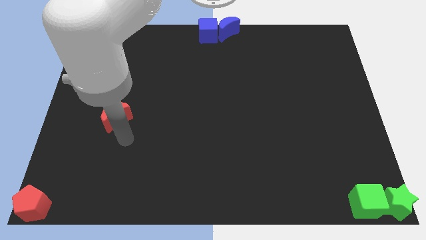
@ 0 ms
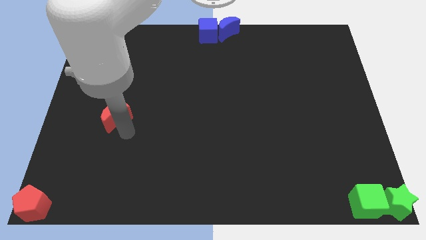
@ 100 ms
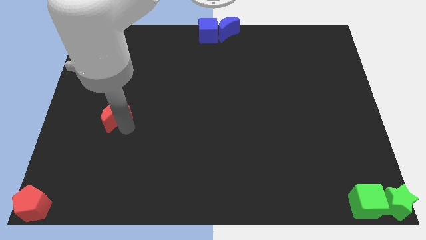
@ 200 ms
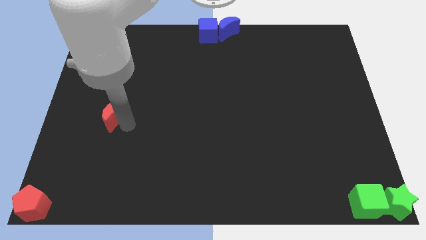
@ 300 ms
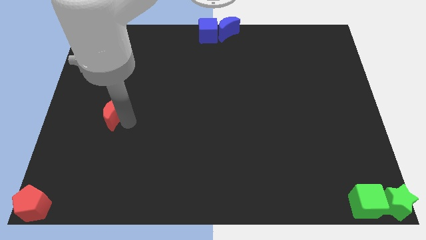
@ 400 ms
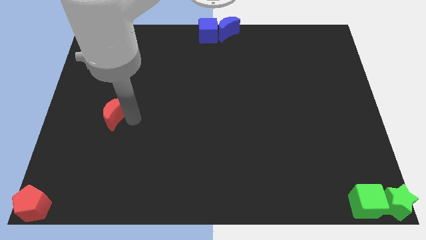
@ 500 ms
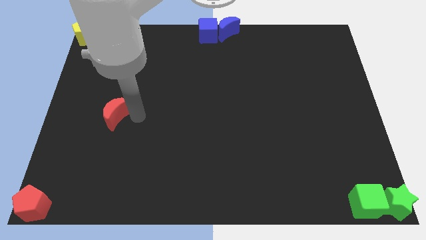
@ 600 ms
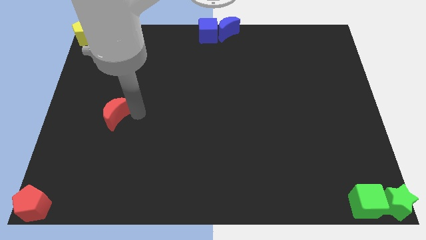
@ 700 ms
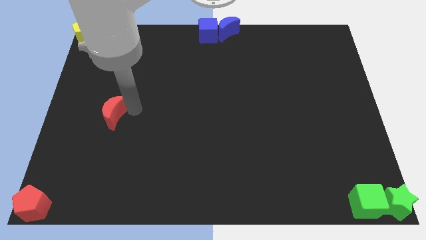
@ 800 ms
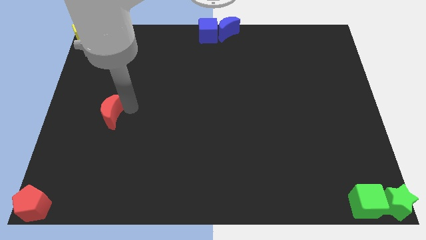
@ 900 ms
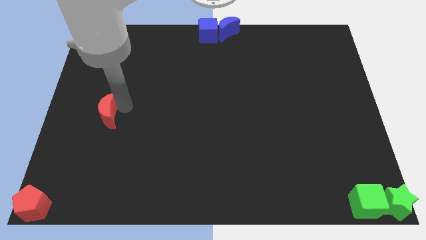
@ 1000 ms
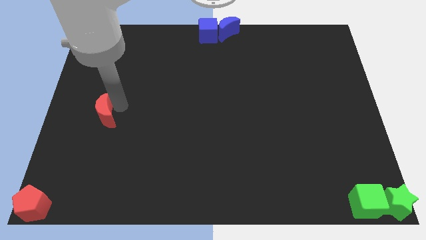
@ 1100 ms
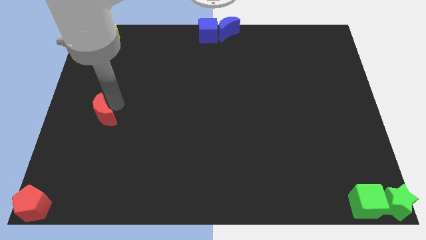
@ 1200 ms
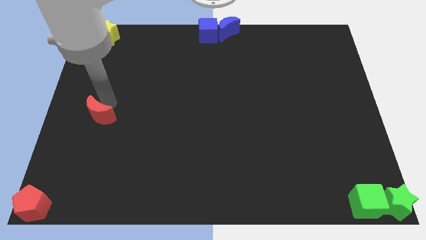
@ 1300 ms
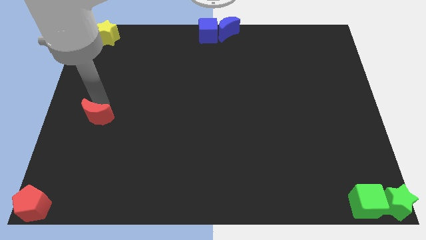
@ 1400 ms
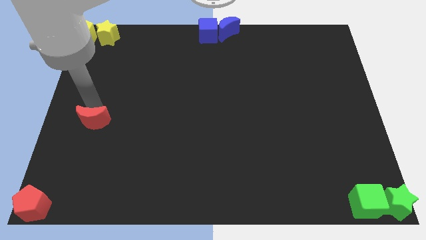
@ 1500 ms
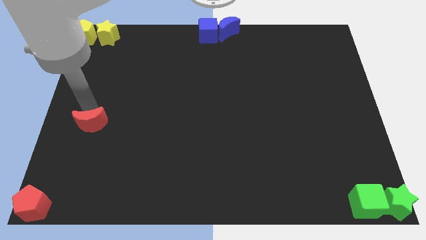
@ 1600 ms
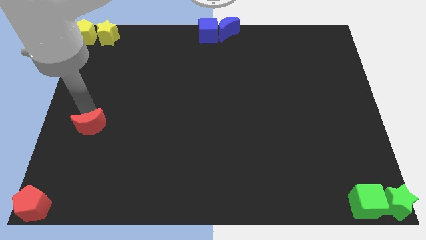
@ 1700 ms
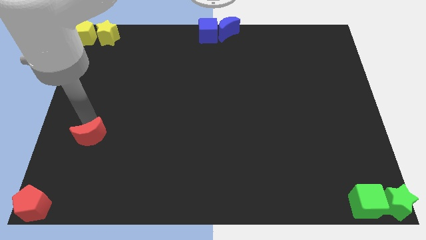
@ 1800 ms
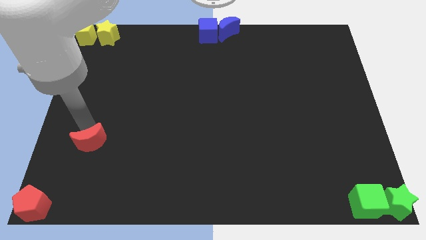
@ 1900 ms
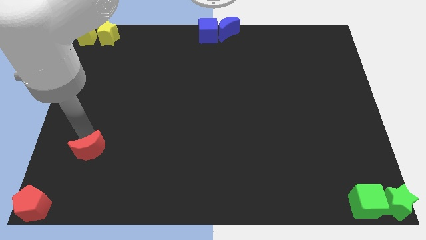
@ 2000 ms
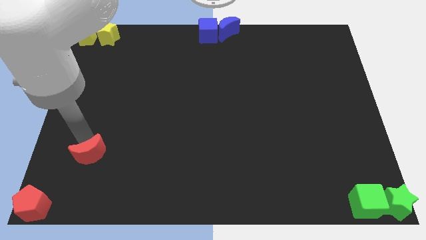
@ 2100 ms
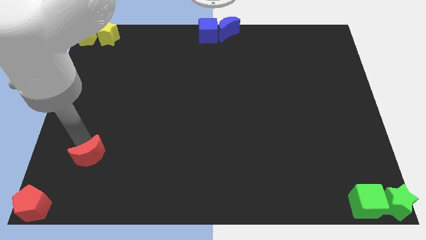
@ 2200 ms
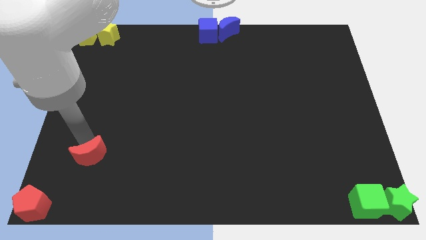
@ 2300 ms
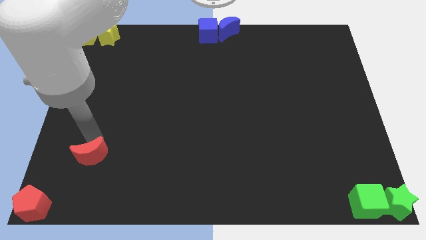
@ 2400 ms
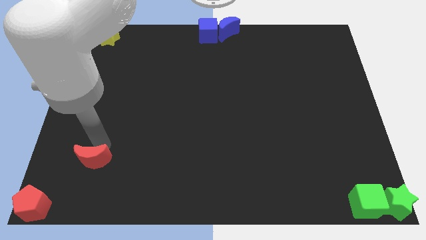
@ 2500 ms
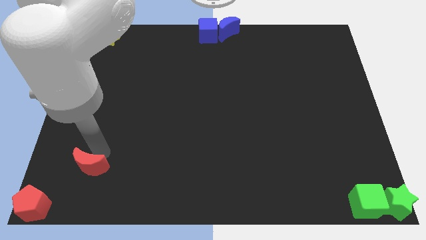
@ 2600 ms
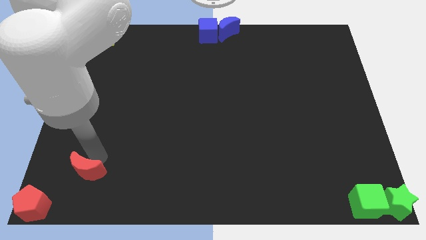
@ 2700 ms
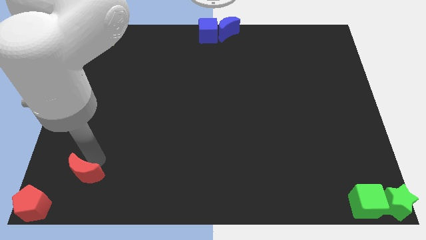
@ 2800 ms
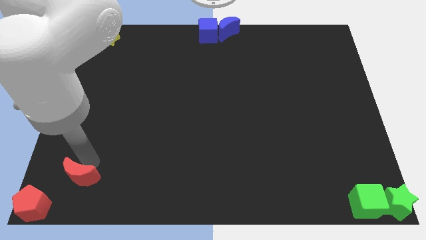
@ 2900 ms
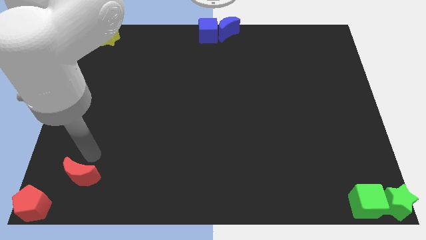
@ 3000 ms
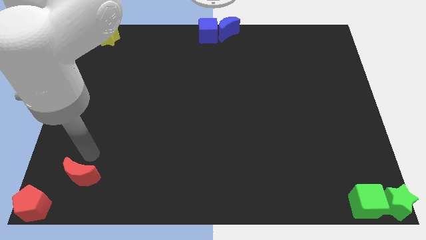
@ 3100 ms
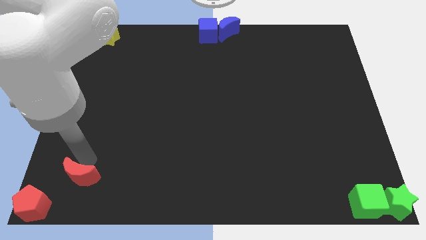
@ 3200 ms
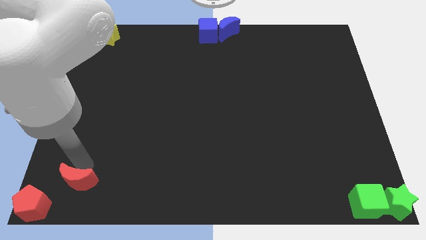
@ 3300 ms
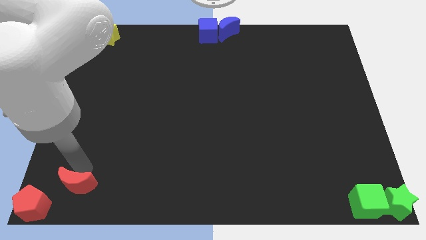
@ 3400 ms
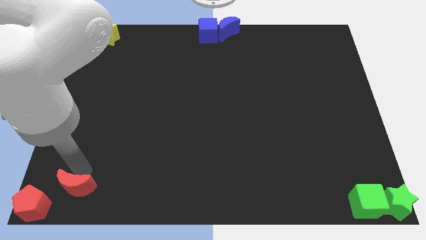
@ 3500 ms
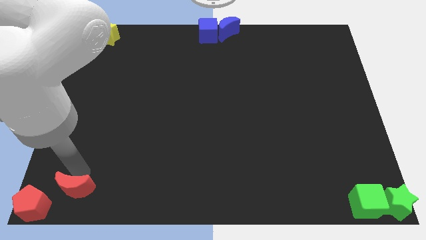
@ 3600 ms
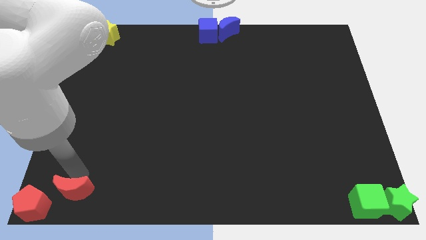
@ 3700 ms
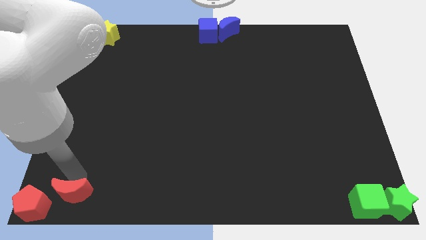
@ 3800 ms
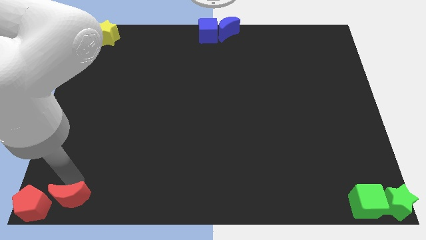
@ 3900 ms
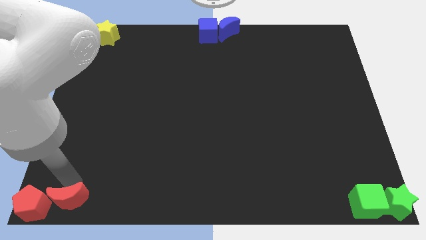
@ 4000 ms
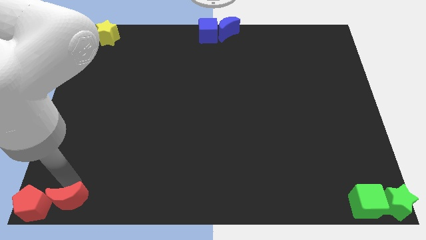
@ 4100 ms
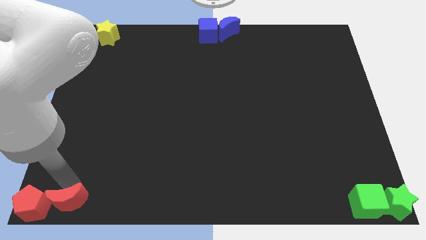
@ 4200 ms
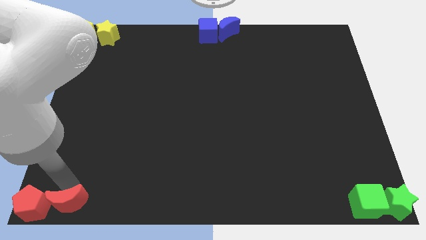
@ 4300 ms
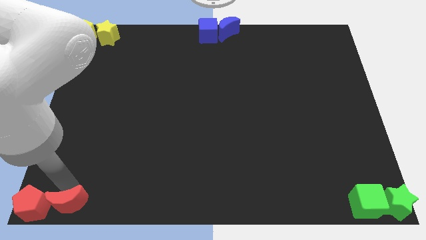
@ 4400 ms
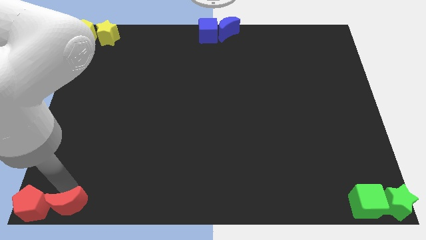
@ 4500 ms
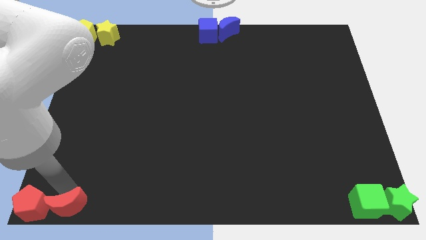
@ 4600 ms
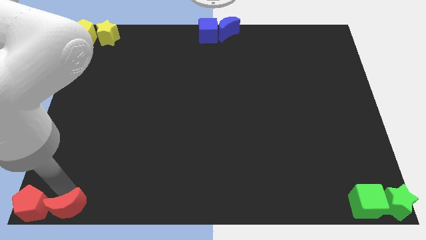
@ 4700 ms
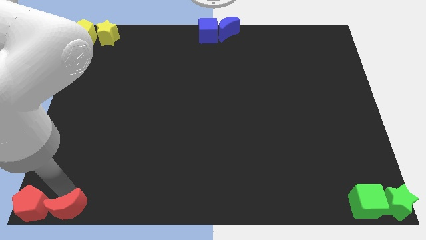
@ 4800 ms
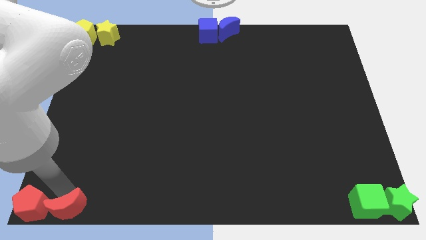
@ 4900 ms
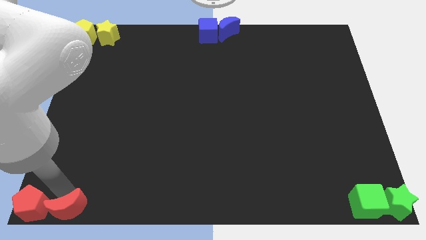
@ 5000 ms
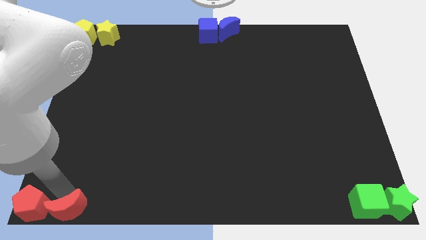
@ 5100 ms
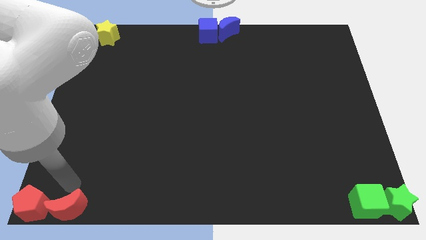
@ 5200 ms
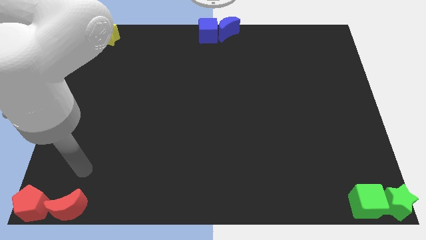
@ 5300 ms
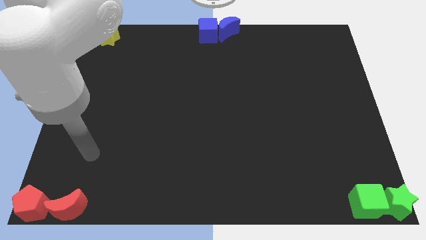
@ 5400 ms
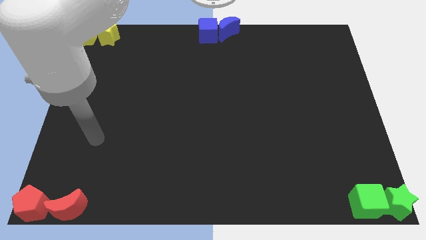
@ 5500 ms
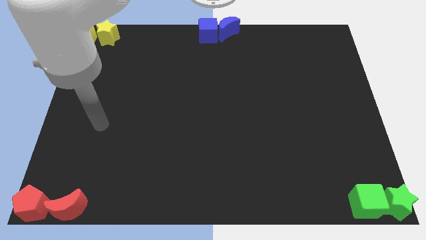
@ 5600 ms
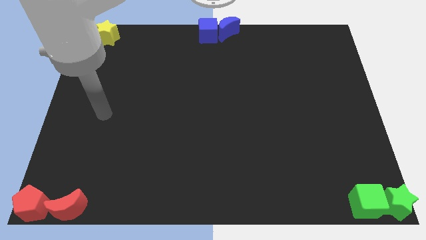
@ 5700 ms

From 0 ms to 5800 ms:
move the red crecent to the right side of the pentagon

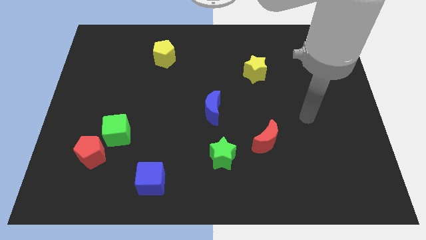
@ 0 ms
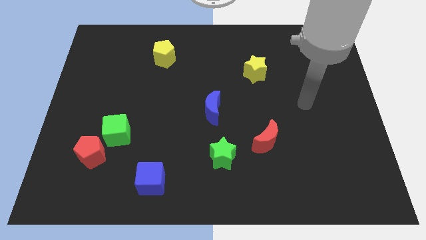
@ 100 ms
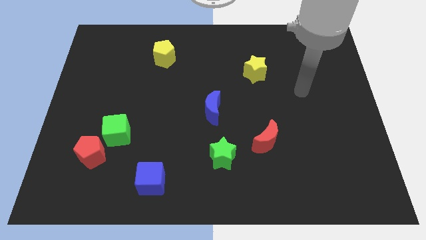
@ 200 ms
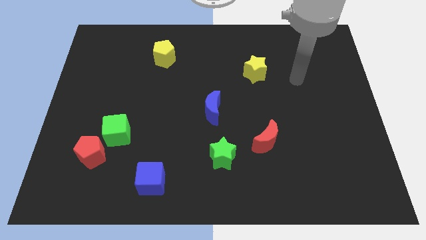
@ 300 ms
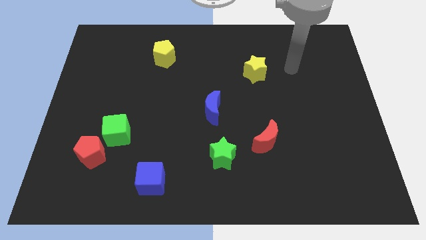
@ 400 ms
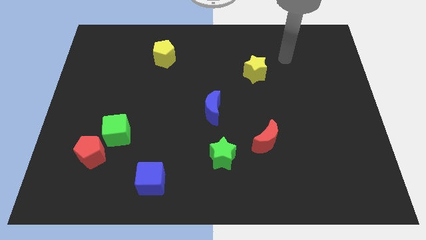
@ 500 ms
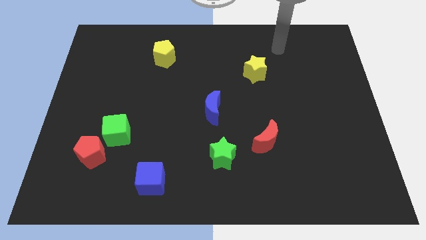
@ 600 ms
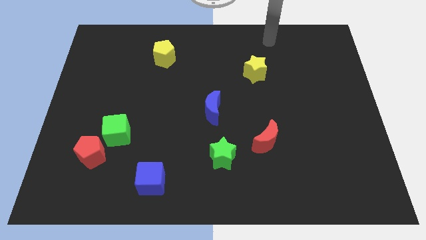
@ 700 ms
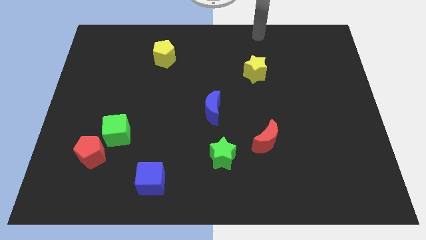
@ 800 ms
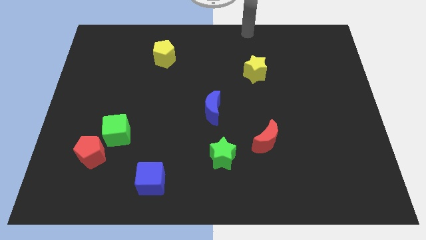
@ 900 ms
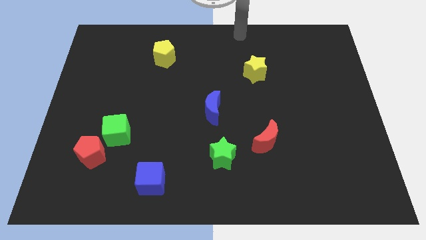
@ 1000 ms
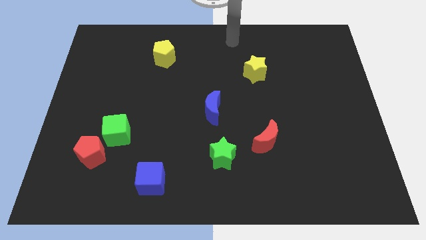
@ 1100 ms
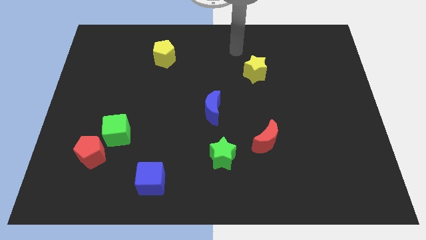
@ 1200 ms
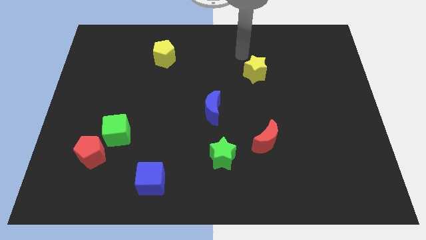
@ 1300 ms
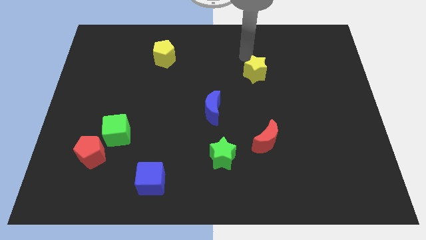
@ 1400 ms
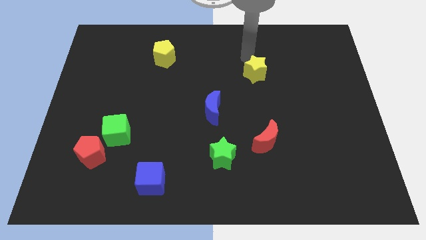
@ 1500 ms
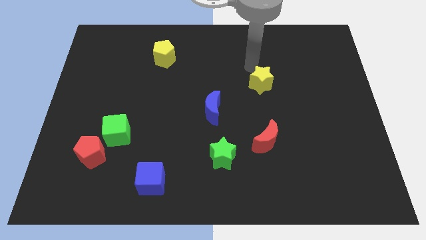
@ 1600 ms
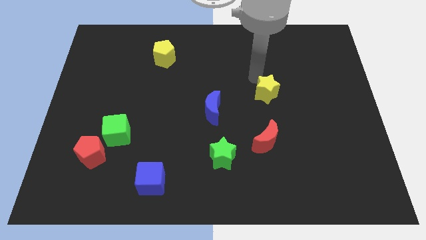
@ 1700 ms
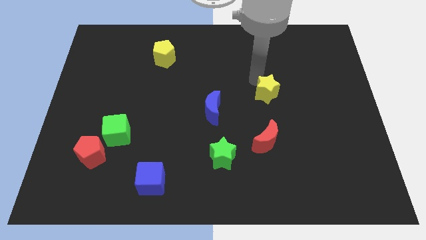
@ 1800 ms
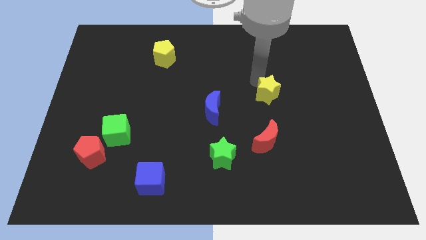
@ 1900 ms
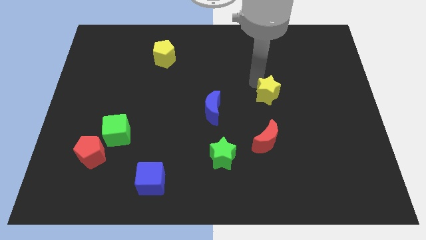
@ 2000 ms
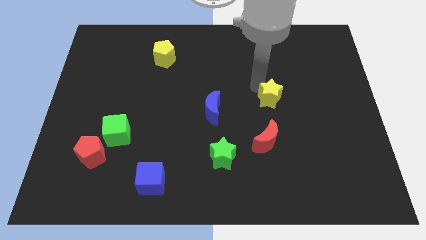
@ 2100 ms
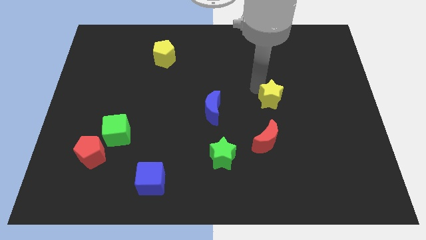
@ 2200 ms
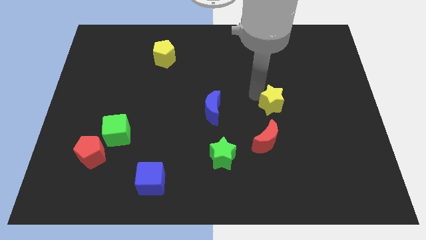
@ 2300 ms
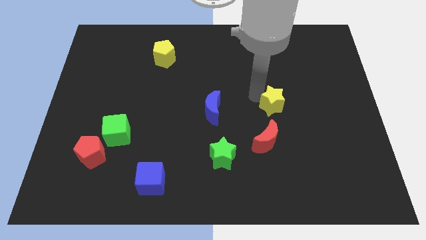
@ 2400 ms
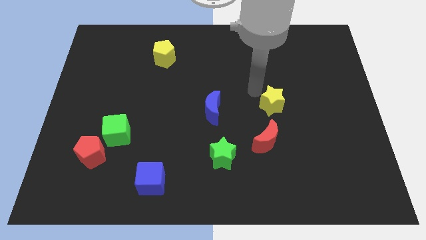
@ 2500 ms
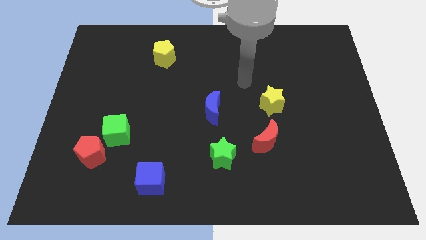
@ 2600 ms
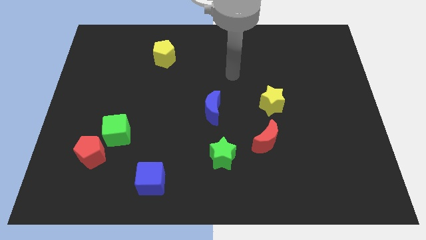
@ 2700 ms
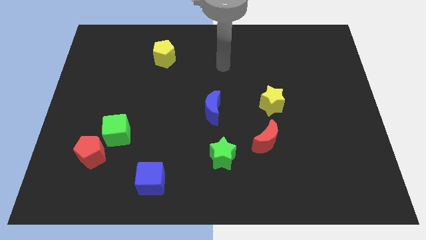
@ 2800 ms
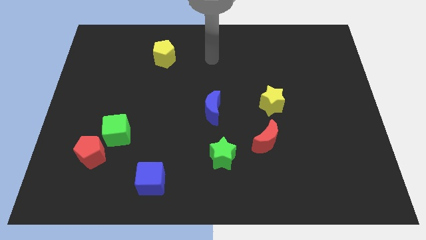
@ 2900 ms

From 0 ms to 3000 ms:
place the yellow star above the red moon

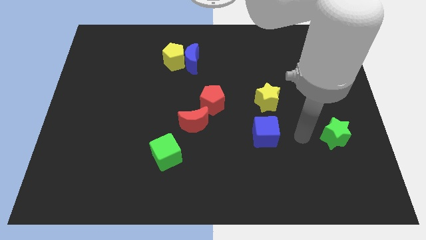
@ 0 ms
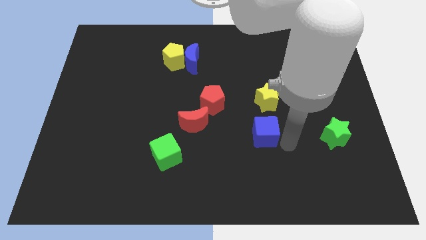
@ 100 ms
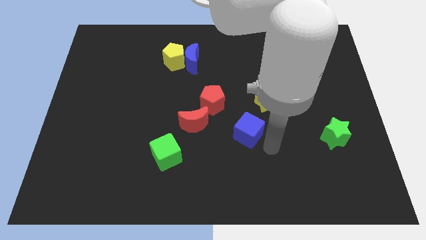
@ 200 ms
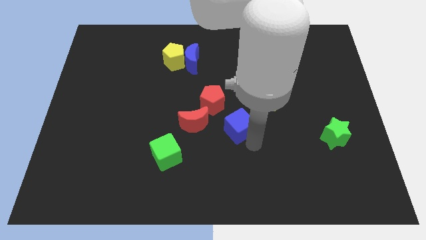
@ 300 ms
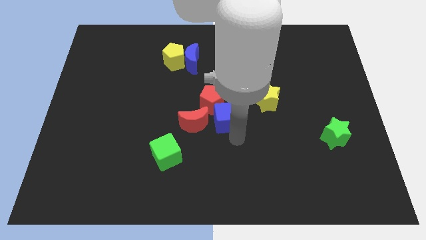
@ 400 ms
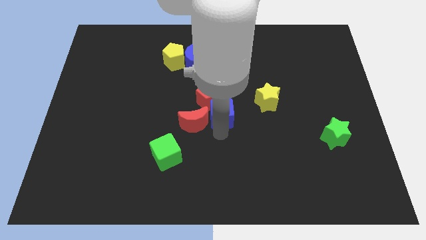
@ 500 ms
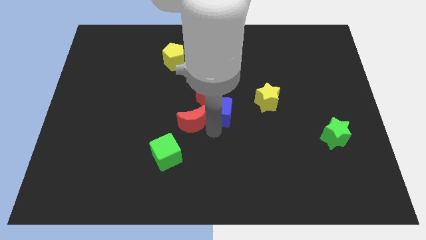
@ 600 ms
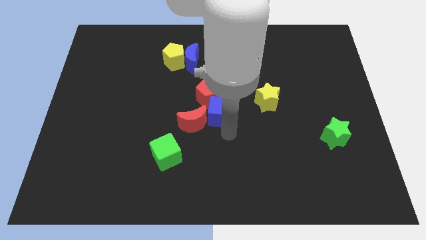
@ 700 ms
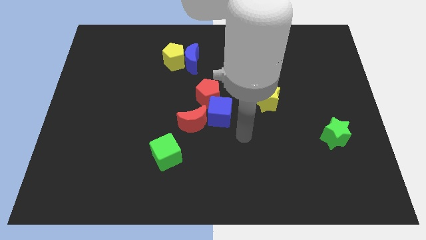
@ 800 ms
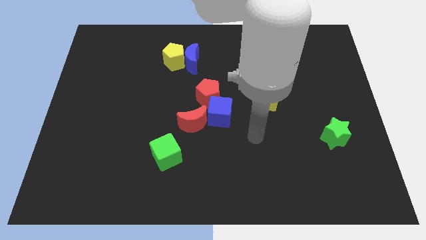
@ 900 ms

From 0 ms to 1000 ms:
push the blue cube towards the red blocks
